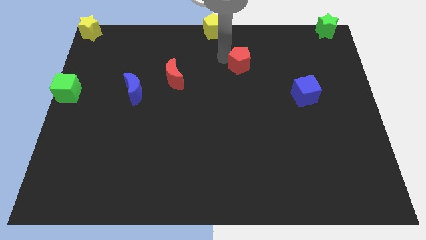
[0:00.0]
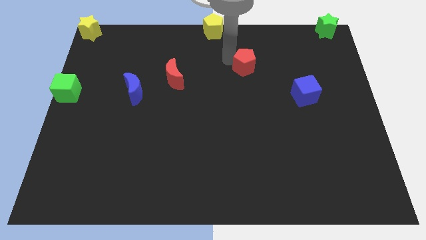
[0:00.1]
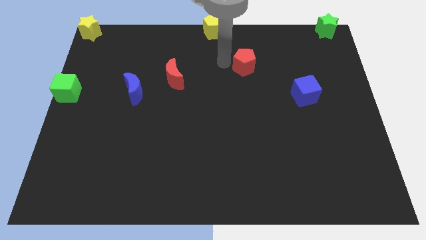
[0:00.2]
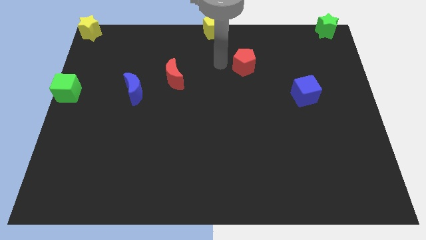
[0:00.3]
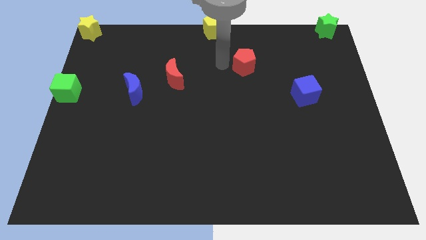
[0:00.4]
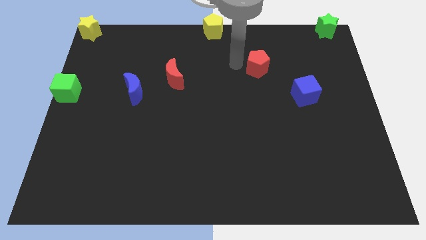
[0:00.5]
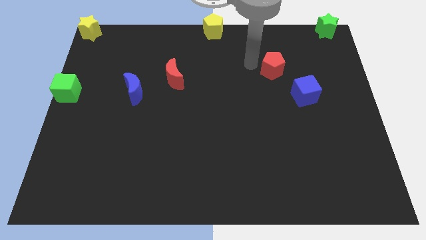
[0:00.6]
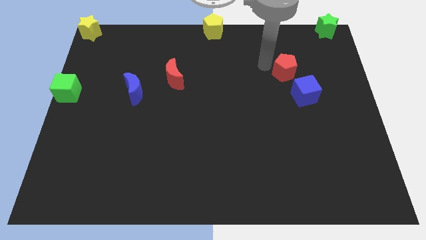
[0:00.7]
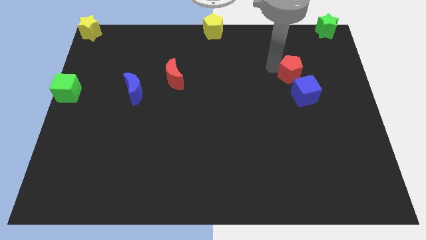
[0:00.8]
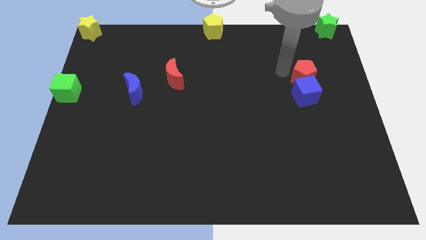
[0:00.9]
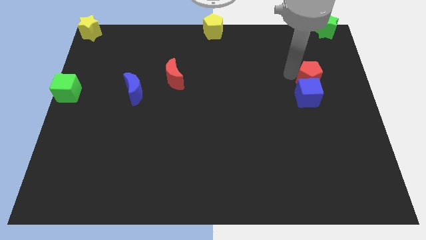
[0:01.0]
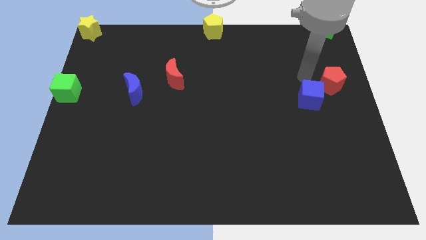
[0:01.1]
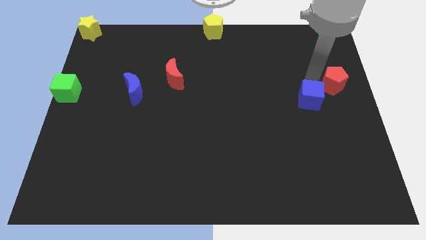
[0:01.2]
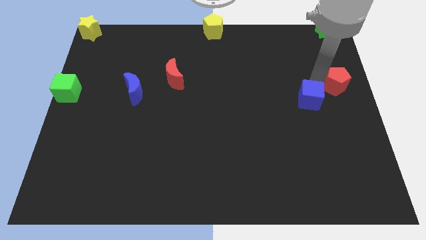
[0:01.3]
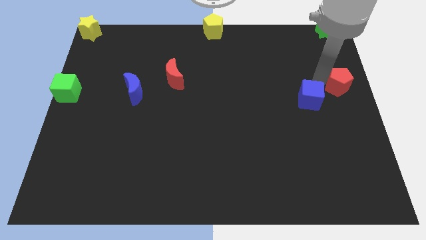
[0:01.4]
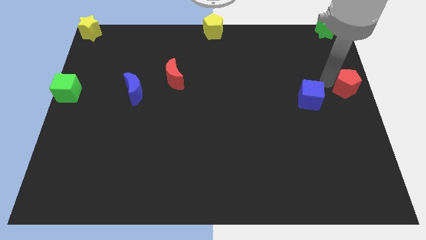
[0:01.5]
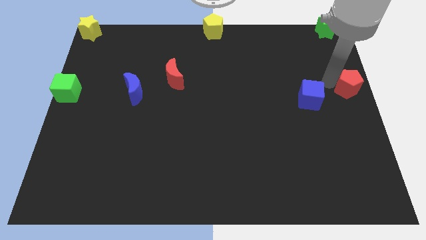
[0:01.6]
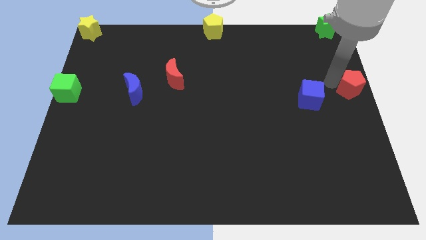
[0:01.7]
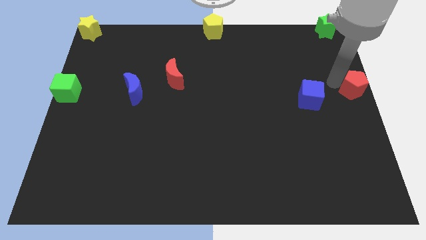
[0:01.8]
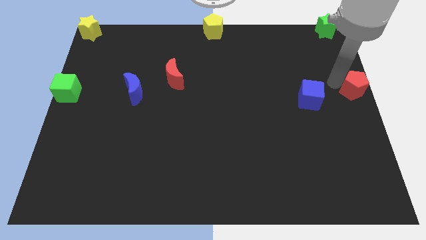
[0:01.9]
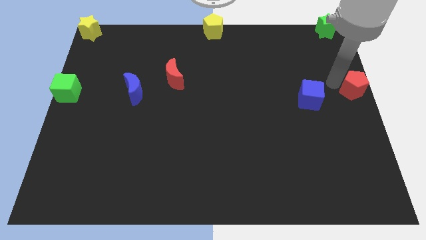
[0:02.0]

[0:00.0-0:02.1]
move the red pentagon to center right

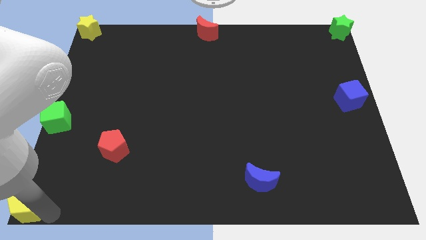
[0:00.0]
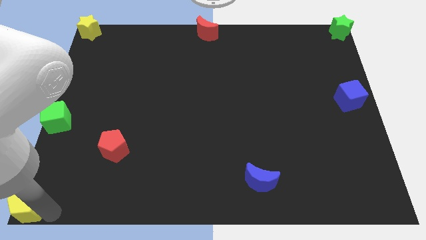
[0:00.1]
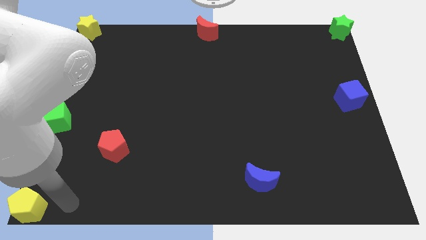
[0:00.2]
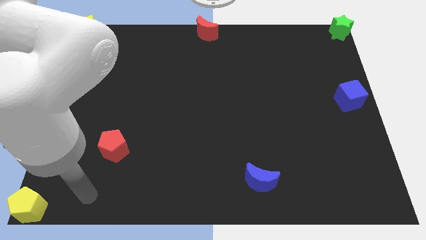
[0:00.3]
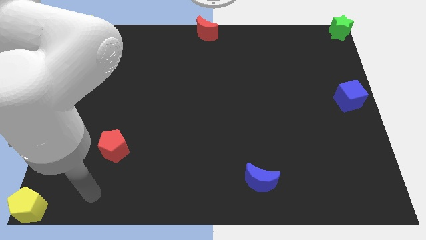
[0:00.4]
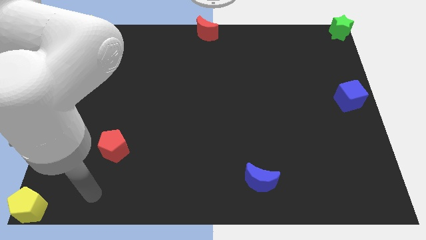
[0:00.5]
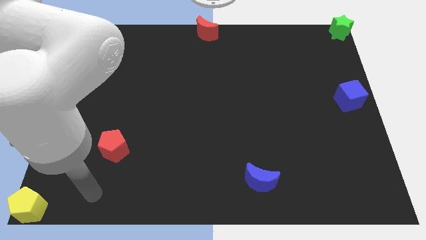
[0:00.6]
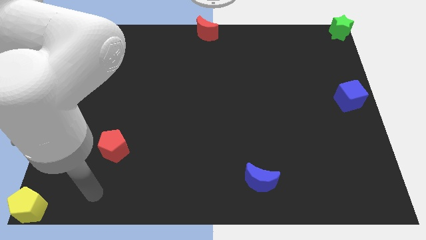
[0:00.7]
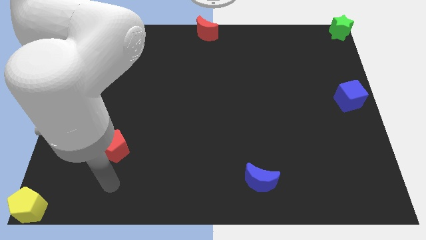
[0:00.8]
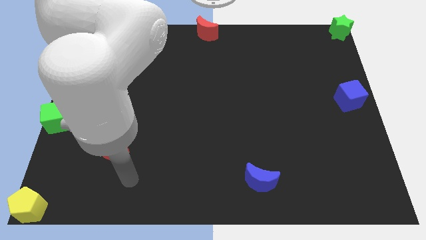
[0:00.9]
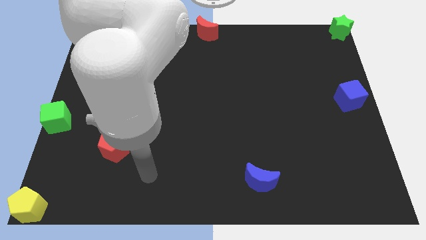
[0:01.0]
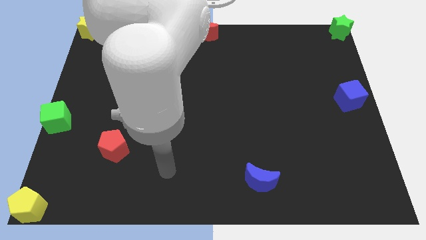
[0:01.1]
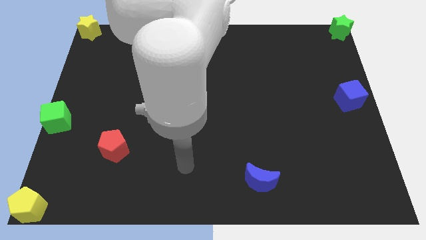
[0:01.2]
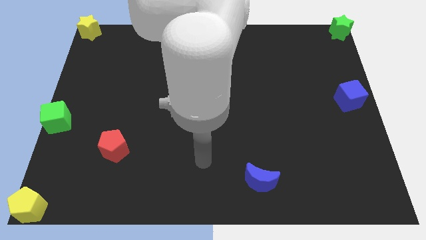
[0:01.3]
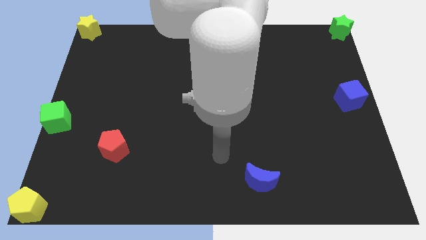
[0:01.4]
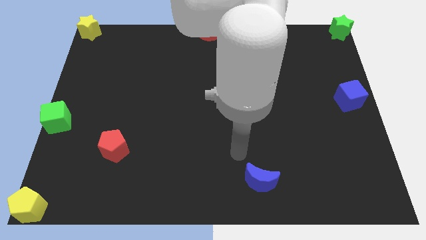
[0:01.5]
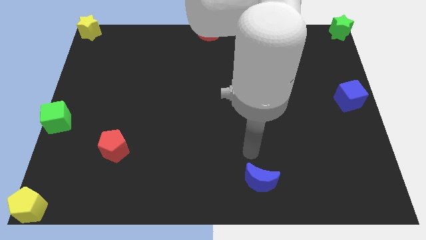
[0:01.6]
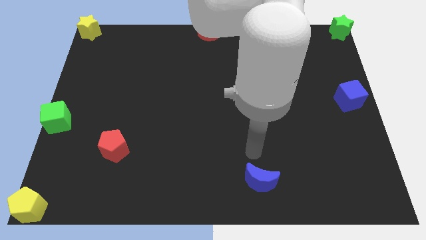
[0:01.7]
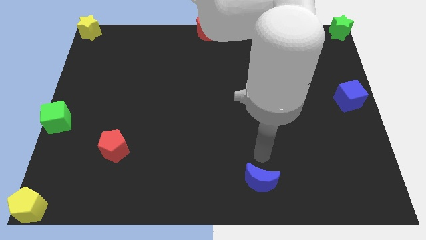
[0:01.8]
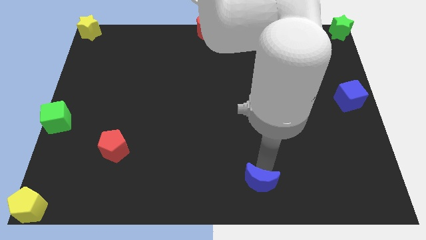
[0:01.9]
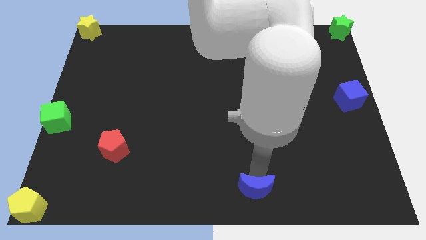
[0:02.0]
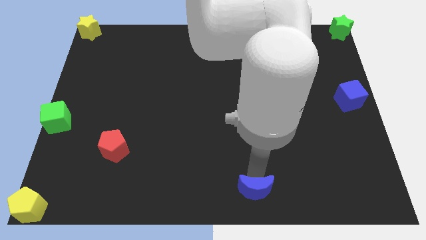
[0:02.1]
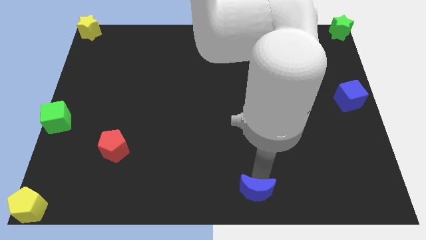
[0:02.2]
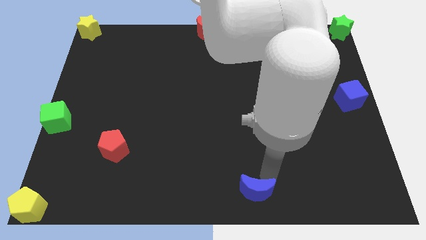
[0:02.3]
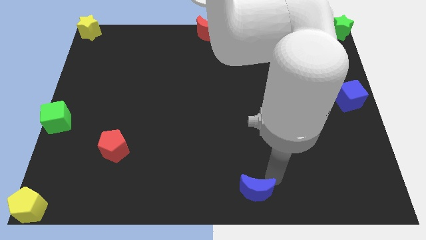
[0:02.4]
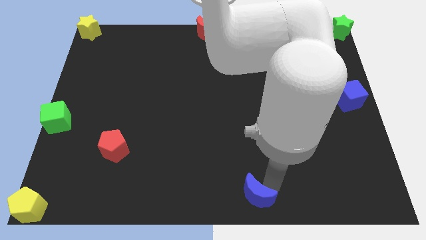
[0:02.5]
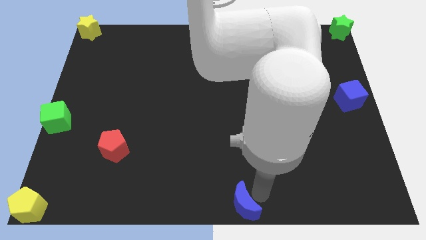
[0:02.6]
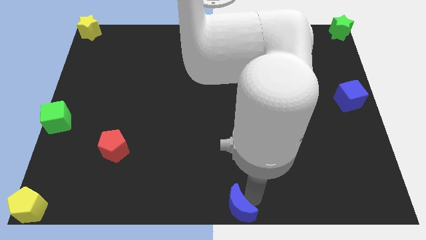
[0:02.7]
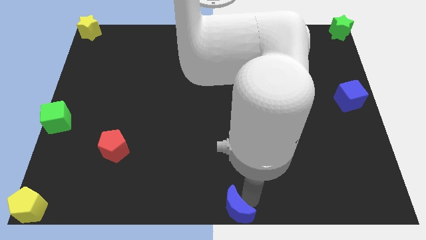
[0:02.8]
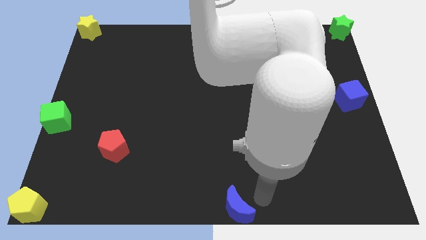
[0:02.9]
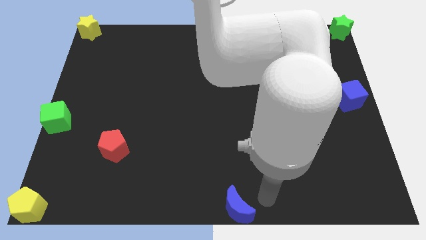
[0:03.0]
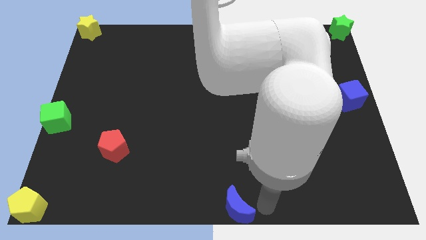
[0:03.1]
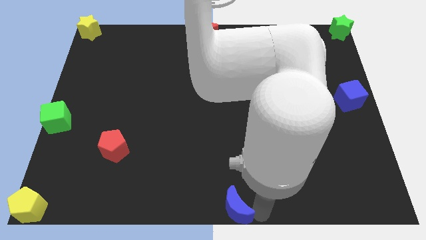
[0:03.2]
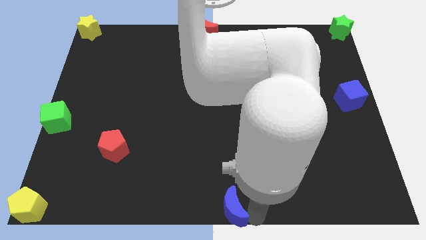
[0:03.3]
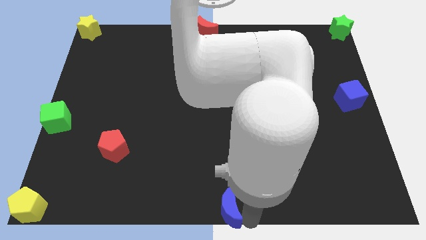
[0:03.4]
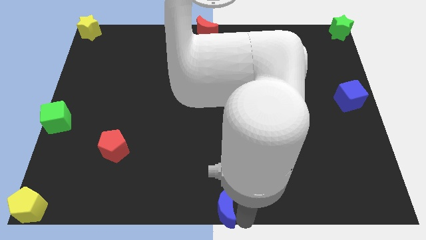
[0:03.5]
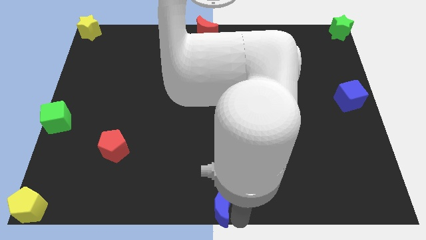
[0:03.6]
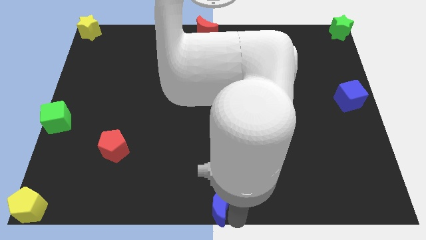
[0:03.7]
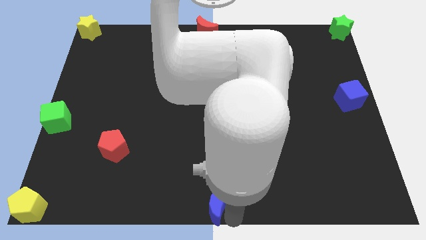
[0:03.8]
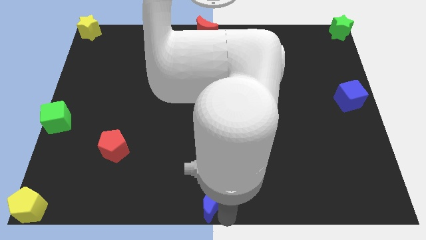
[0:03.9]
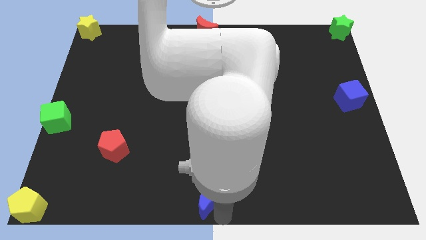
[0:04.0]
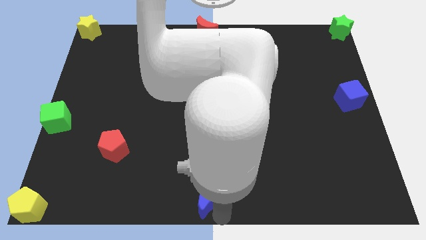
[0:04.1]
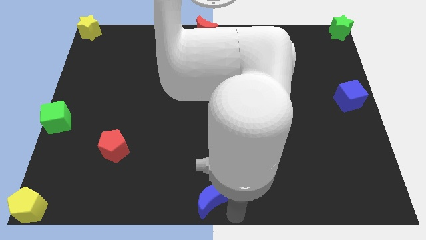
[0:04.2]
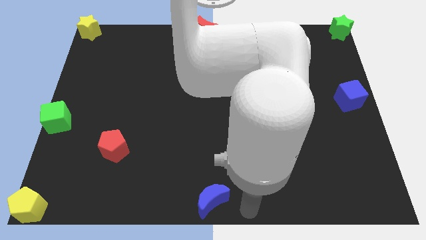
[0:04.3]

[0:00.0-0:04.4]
move the blue moon at the bottom center of the board

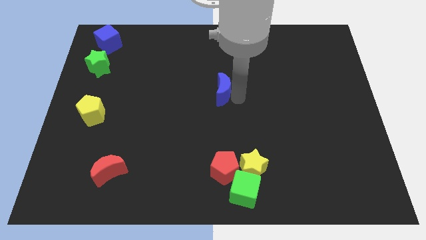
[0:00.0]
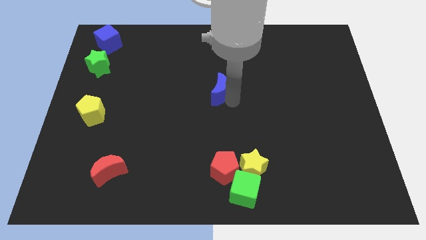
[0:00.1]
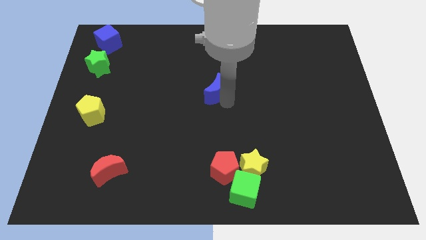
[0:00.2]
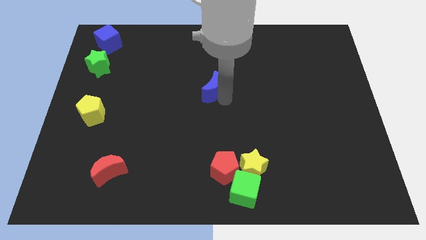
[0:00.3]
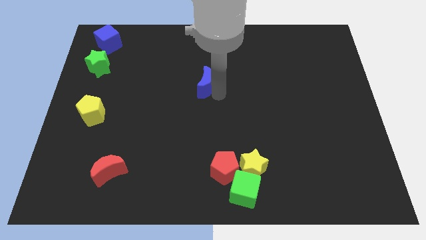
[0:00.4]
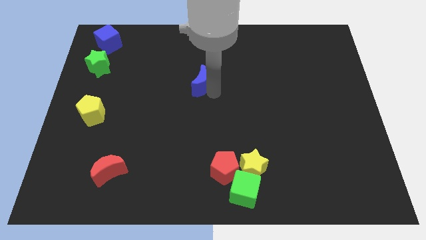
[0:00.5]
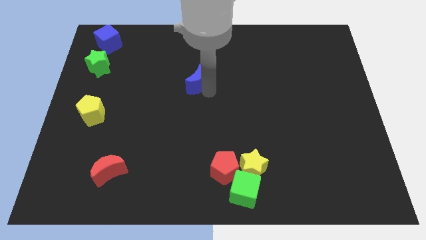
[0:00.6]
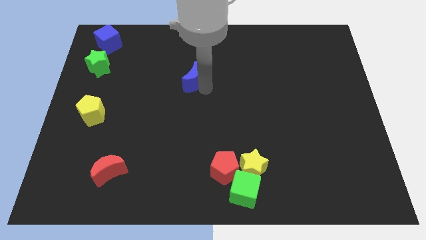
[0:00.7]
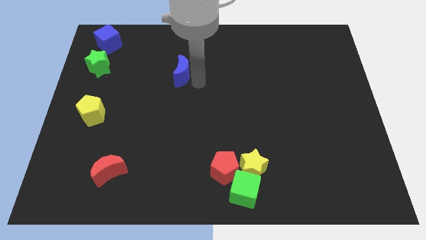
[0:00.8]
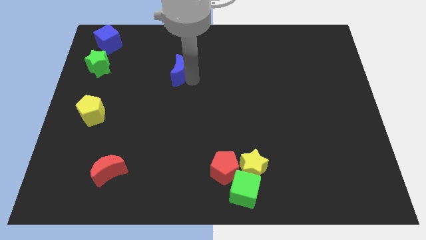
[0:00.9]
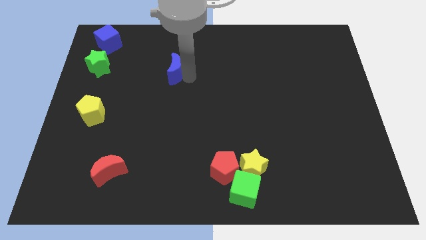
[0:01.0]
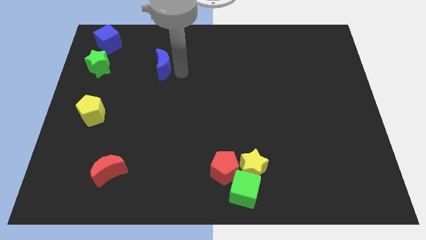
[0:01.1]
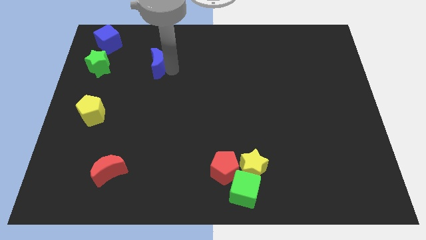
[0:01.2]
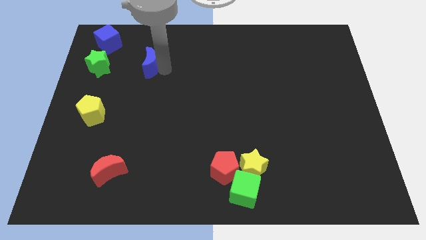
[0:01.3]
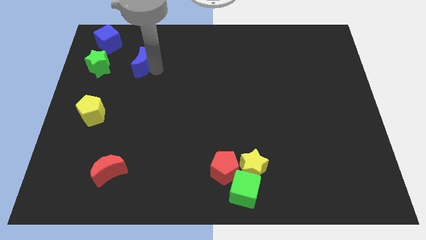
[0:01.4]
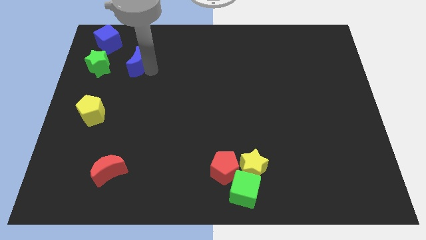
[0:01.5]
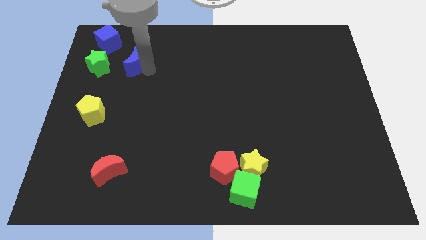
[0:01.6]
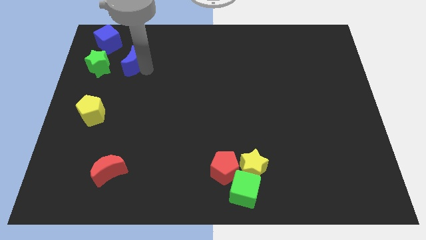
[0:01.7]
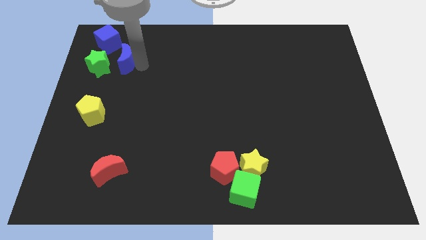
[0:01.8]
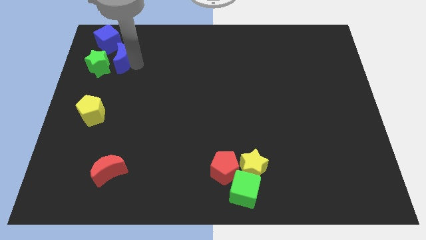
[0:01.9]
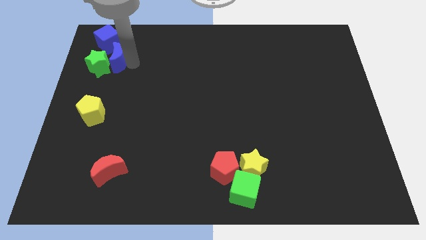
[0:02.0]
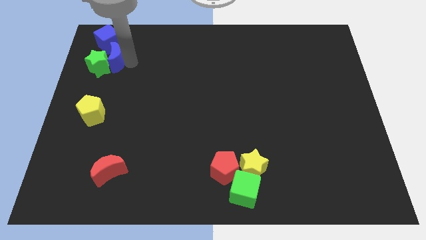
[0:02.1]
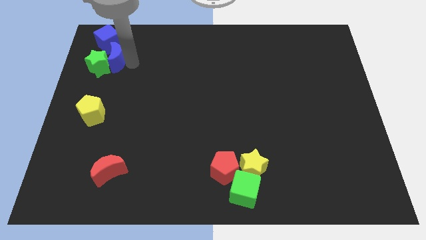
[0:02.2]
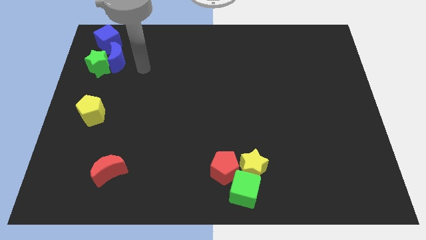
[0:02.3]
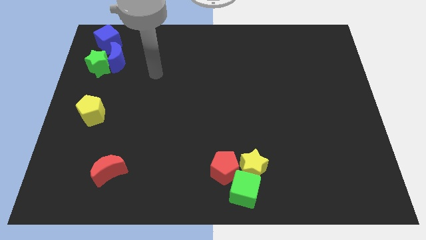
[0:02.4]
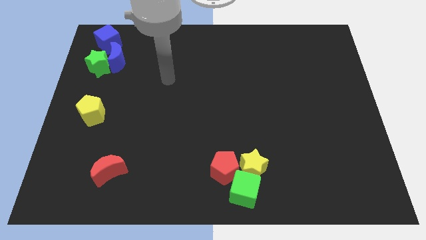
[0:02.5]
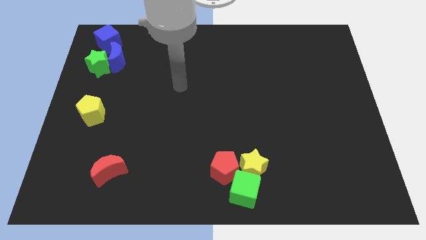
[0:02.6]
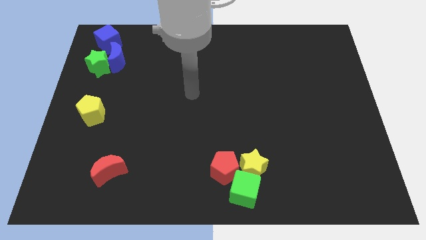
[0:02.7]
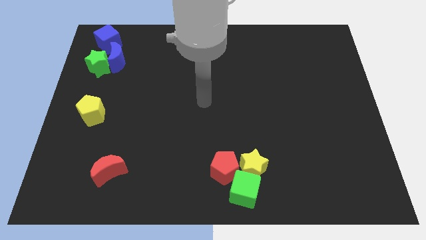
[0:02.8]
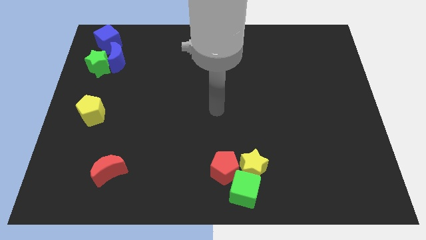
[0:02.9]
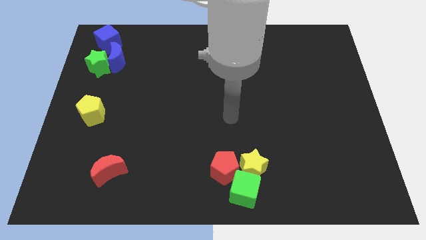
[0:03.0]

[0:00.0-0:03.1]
push the blue moon into the green star and blue cube
